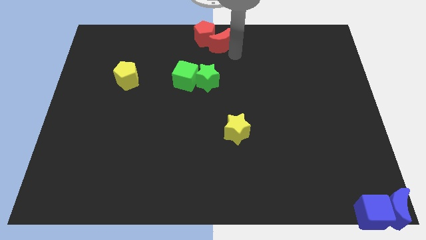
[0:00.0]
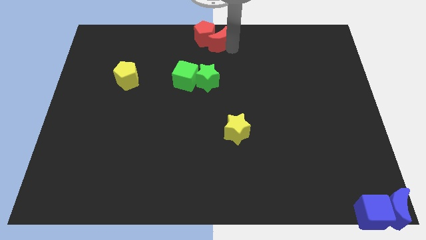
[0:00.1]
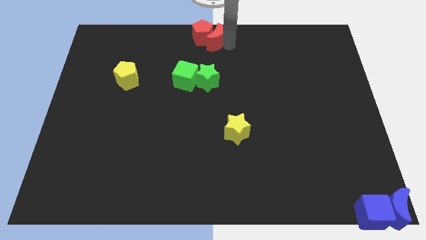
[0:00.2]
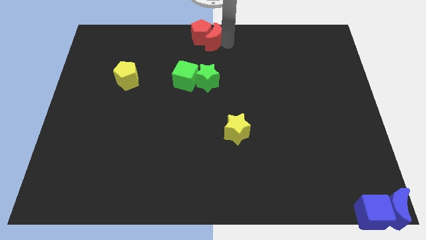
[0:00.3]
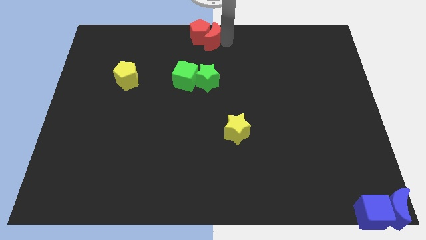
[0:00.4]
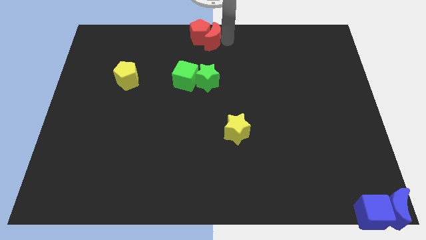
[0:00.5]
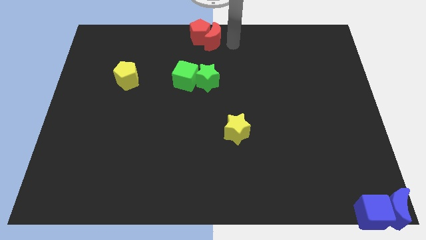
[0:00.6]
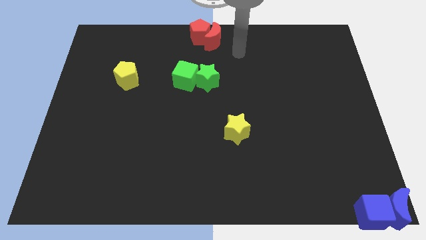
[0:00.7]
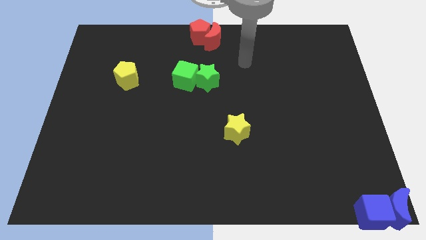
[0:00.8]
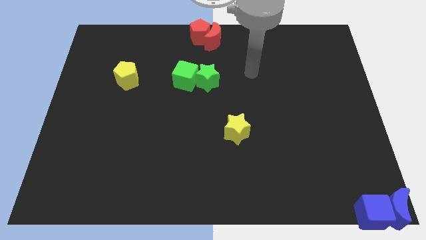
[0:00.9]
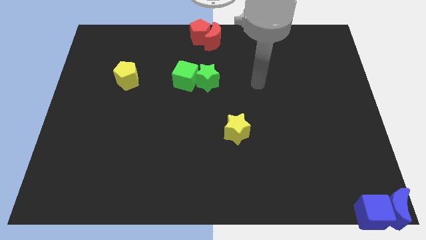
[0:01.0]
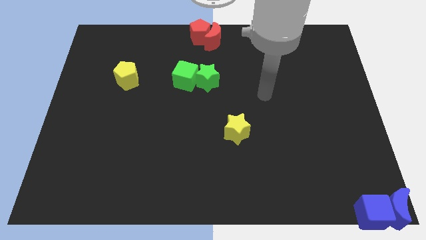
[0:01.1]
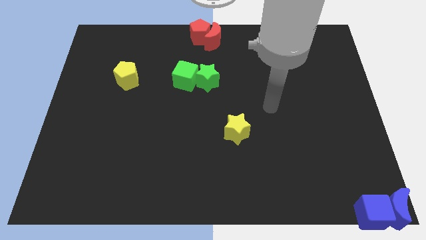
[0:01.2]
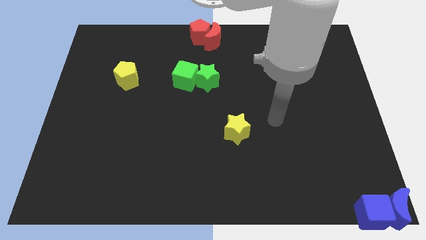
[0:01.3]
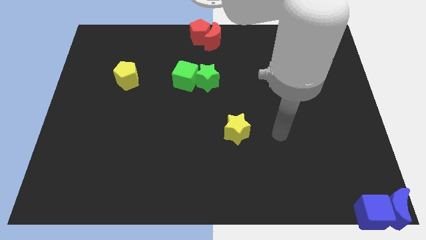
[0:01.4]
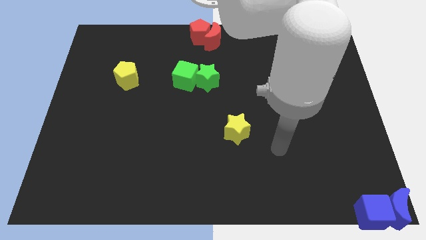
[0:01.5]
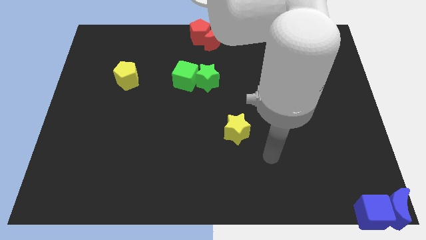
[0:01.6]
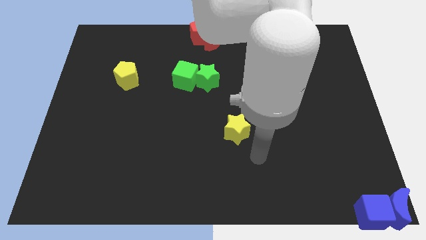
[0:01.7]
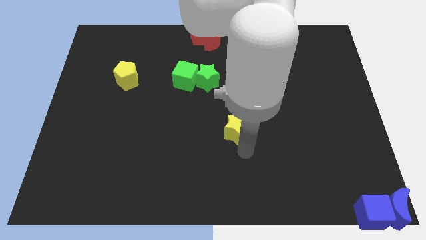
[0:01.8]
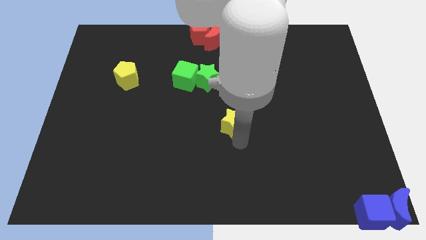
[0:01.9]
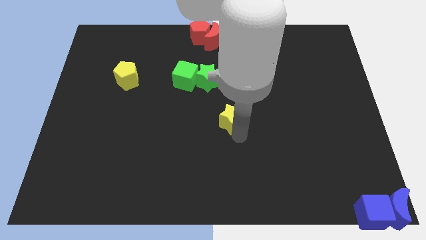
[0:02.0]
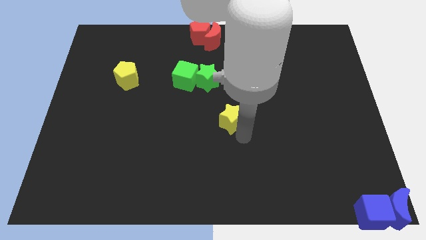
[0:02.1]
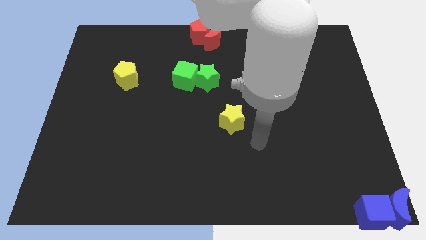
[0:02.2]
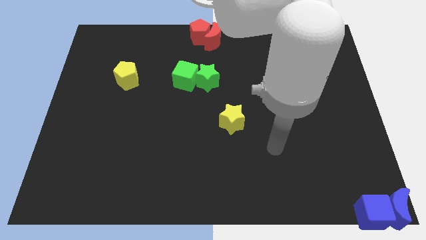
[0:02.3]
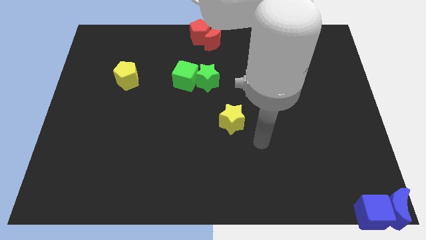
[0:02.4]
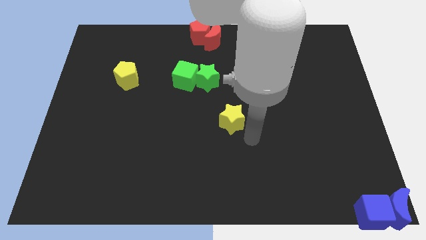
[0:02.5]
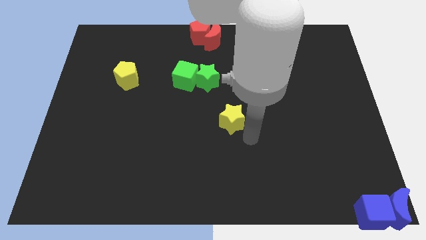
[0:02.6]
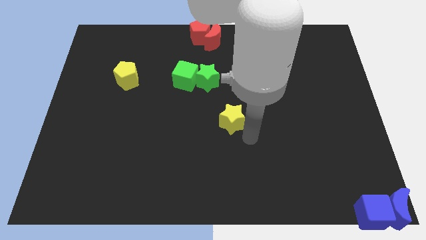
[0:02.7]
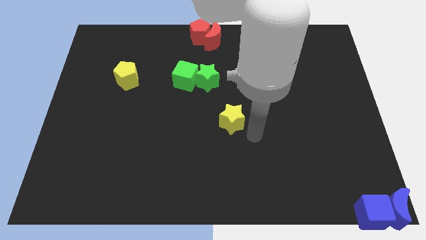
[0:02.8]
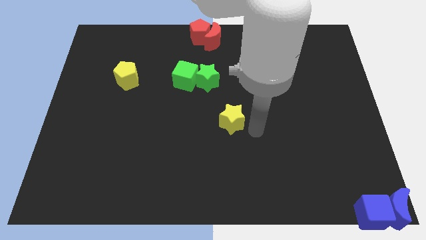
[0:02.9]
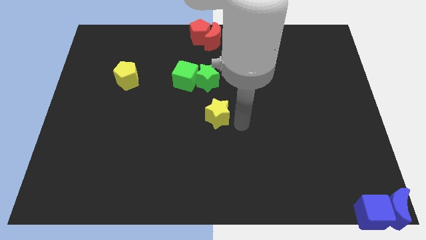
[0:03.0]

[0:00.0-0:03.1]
place yellow star center of the board

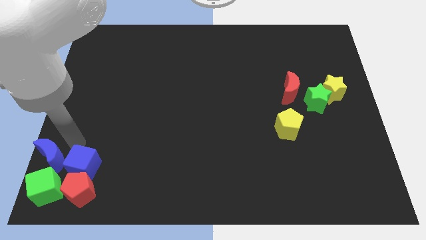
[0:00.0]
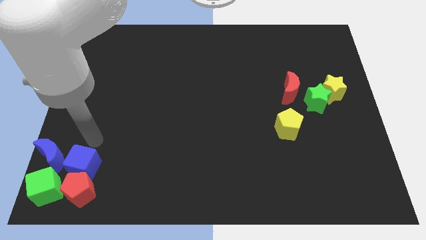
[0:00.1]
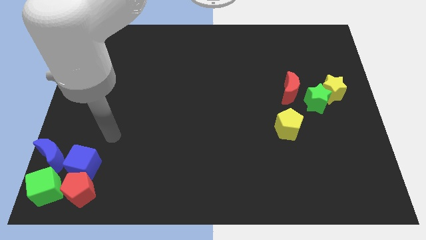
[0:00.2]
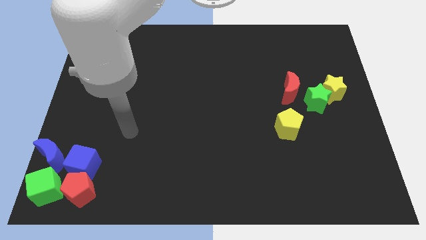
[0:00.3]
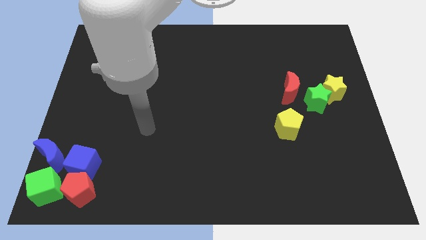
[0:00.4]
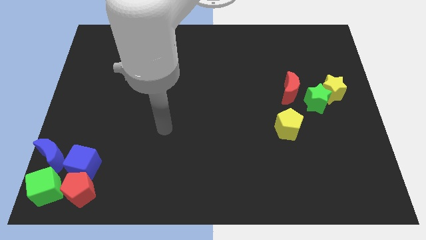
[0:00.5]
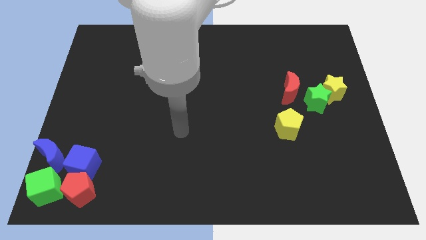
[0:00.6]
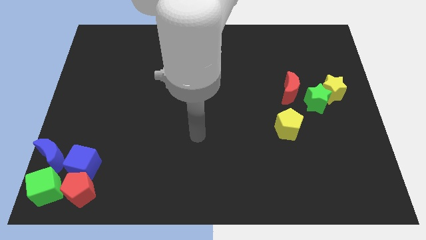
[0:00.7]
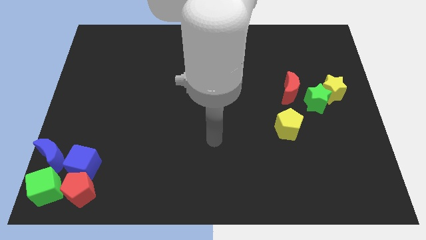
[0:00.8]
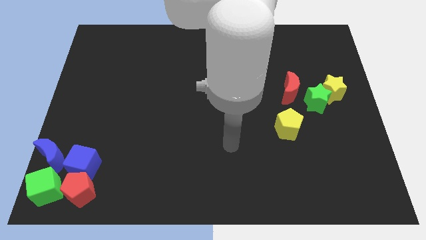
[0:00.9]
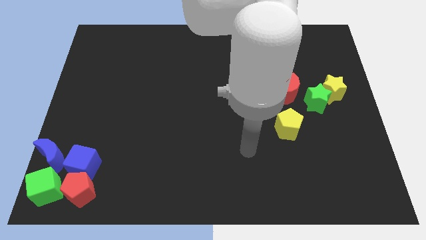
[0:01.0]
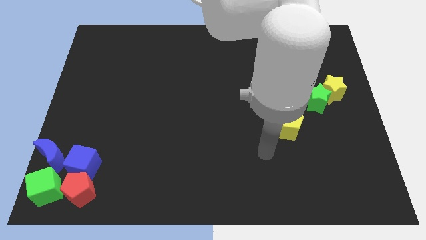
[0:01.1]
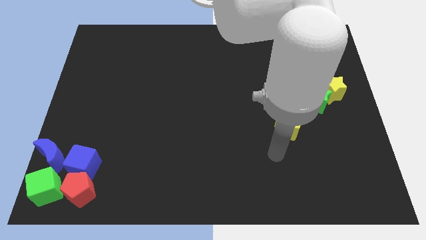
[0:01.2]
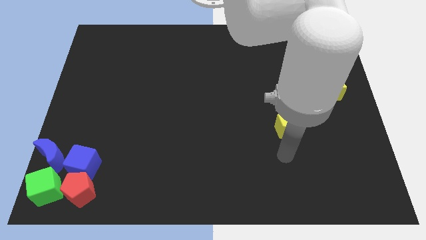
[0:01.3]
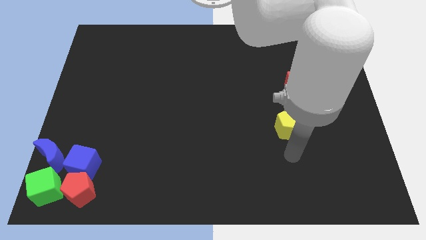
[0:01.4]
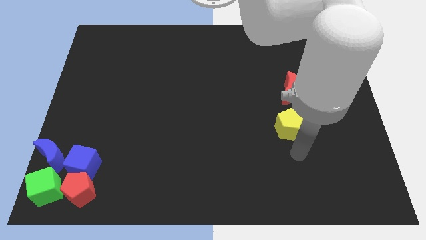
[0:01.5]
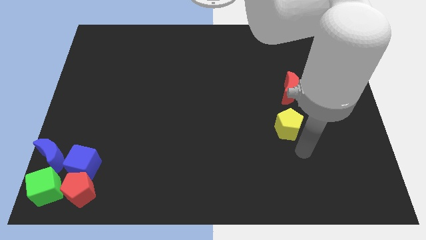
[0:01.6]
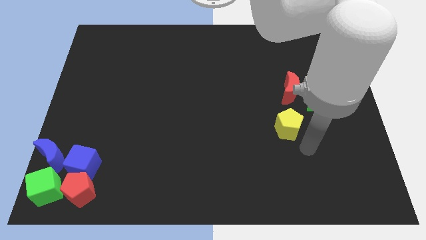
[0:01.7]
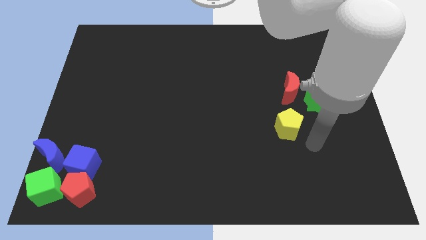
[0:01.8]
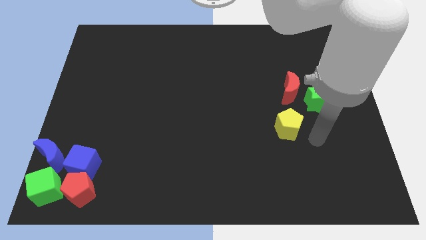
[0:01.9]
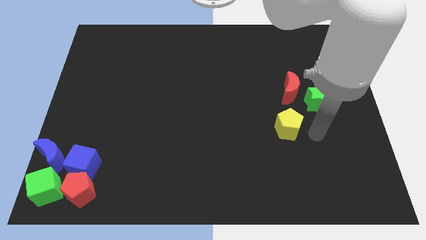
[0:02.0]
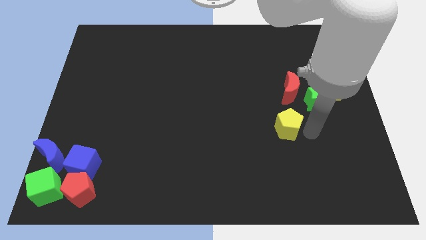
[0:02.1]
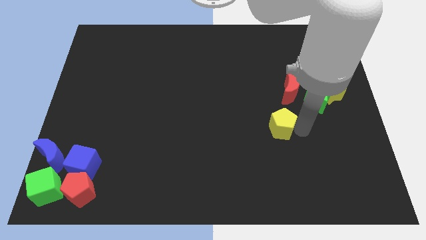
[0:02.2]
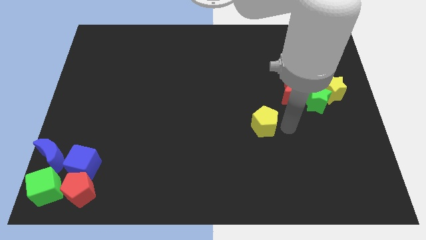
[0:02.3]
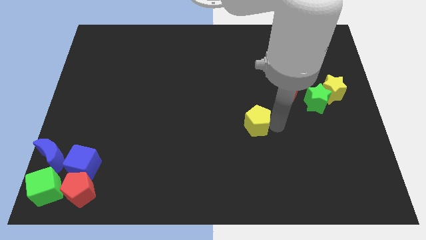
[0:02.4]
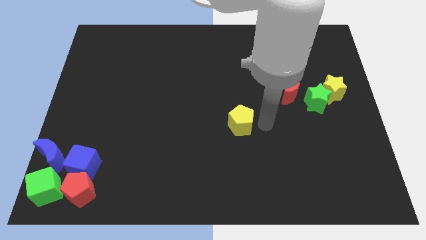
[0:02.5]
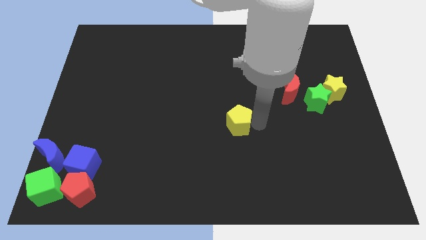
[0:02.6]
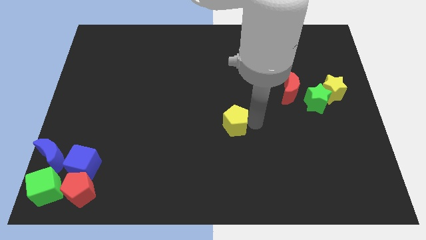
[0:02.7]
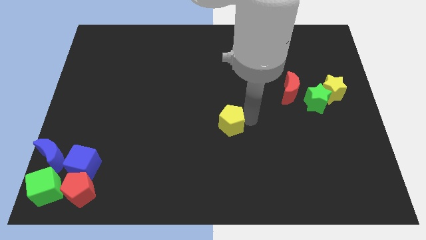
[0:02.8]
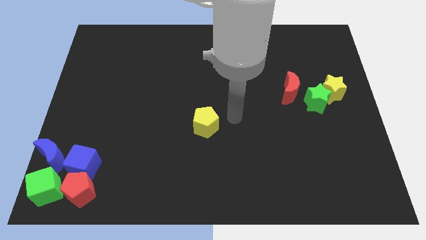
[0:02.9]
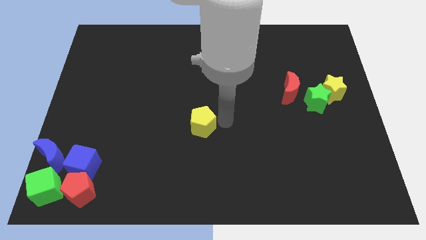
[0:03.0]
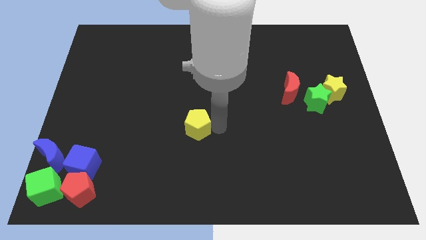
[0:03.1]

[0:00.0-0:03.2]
move the yellow pentagon to the left side

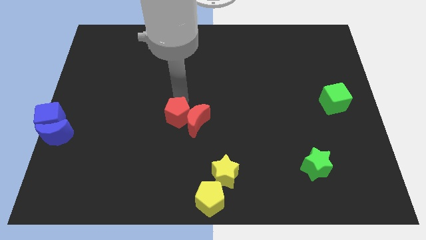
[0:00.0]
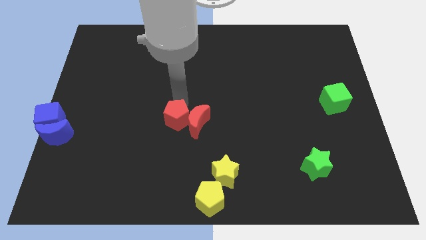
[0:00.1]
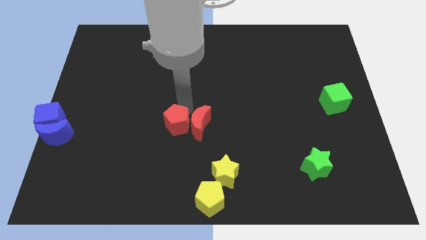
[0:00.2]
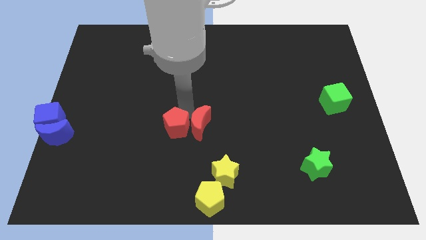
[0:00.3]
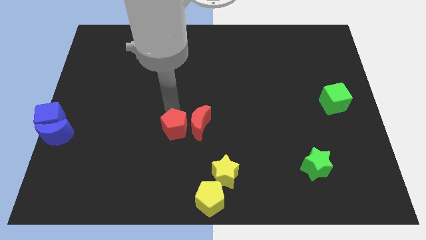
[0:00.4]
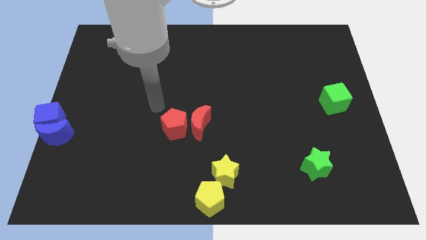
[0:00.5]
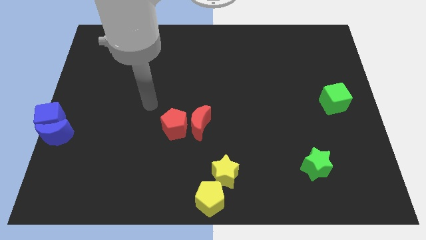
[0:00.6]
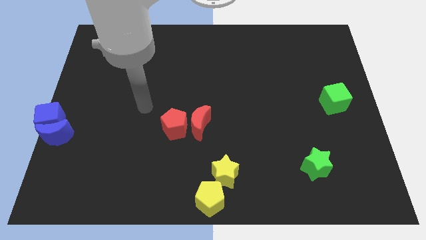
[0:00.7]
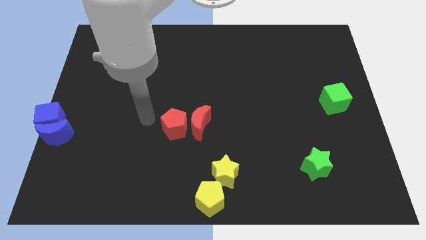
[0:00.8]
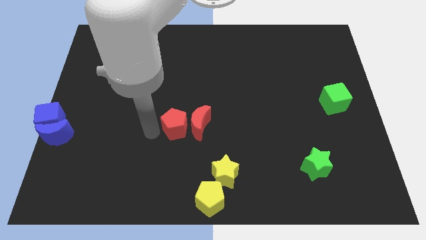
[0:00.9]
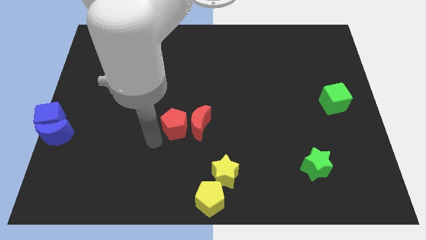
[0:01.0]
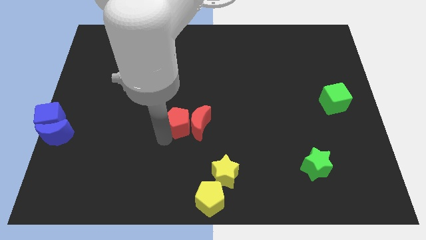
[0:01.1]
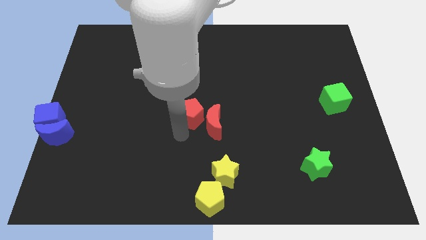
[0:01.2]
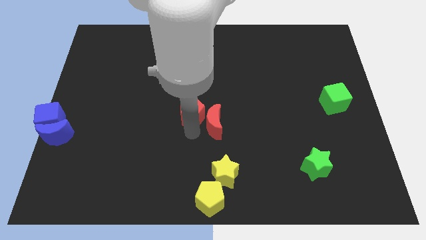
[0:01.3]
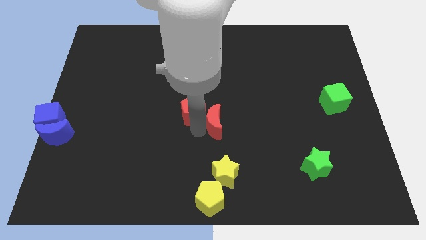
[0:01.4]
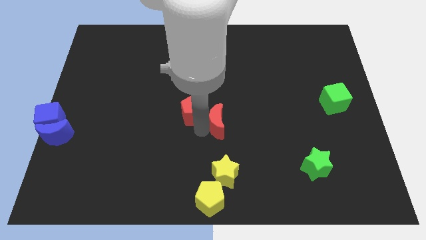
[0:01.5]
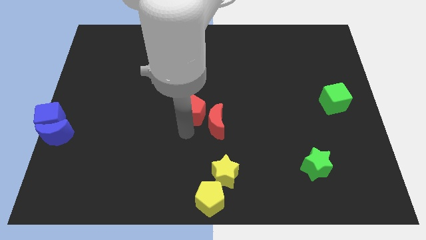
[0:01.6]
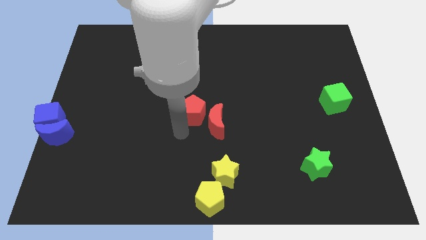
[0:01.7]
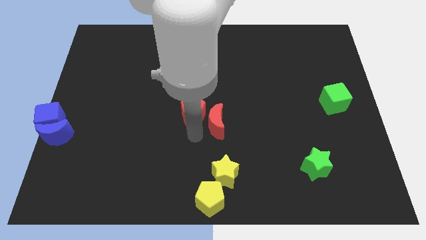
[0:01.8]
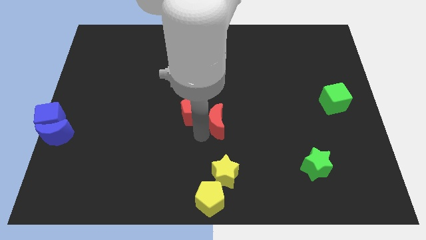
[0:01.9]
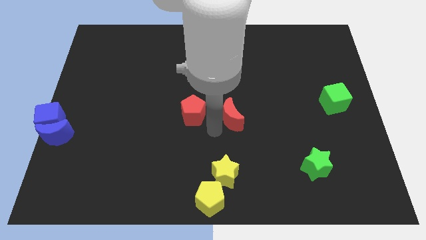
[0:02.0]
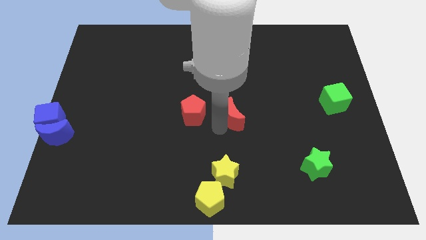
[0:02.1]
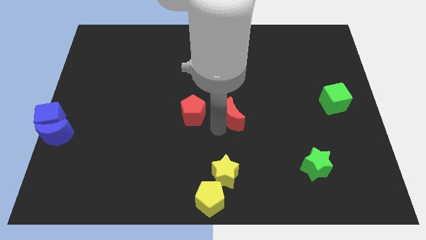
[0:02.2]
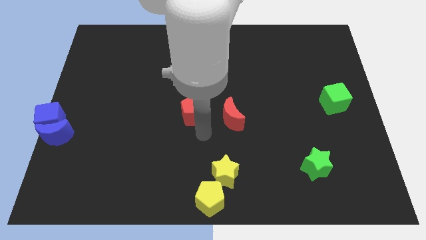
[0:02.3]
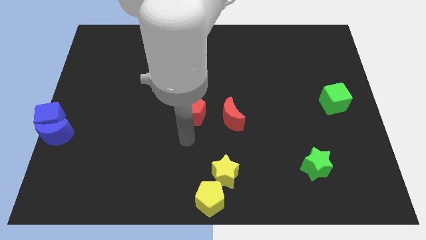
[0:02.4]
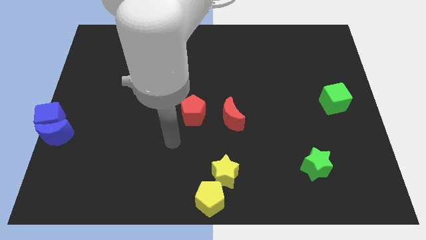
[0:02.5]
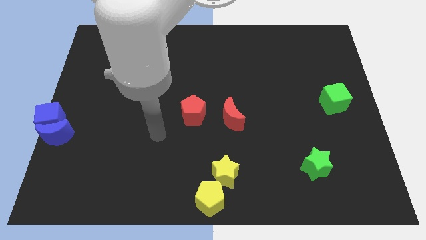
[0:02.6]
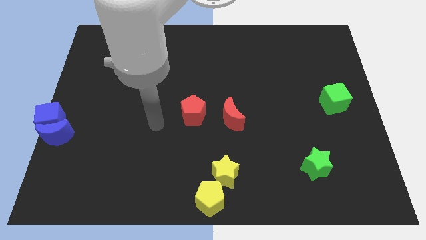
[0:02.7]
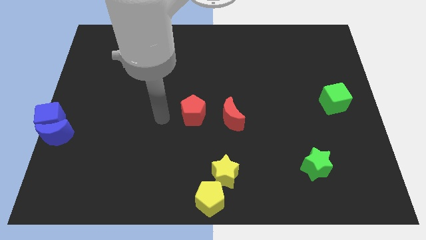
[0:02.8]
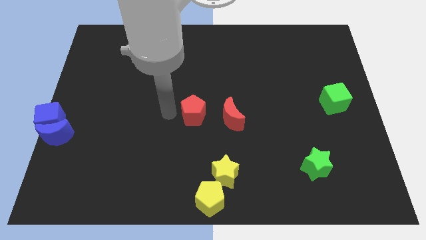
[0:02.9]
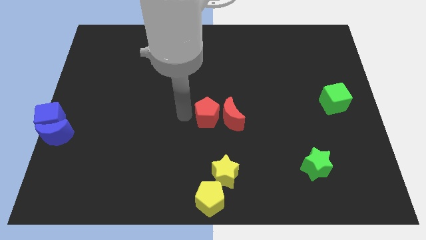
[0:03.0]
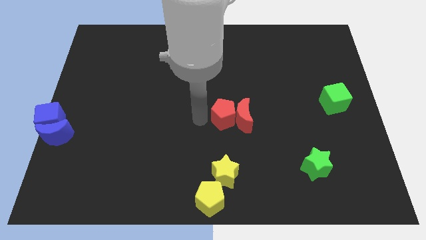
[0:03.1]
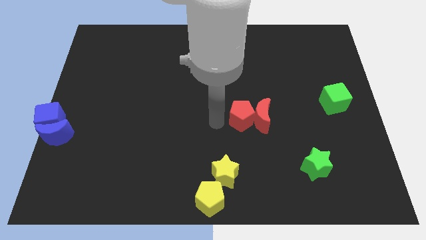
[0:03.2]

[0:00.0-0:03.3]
place red pentagon above yellow star
